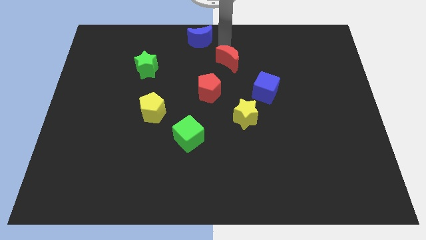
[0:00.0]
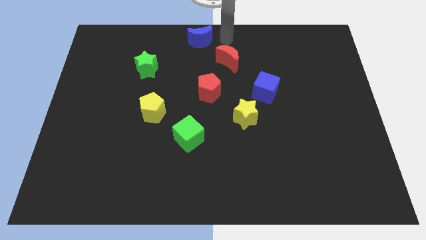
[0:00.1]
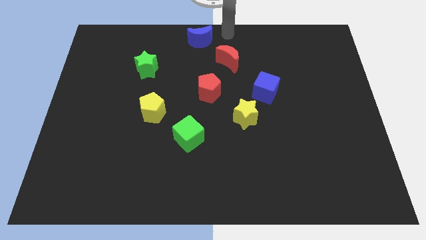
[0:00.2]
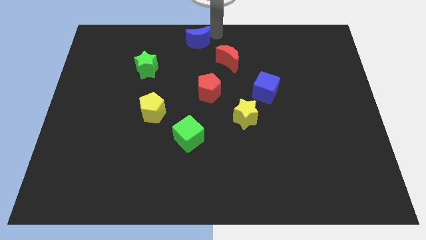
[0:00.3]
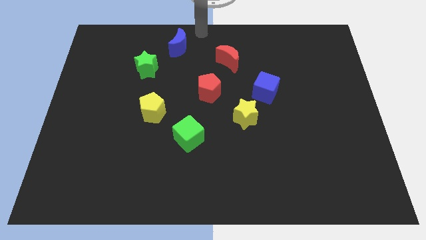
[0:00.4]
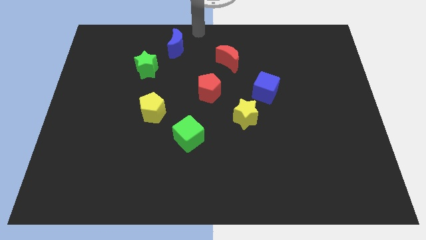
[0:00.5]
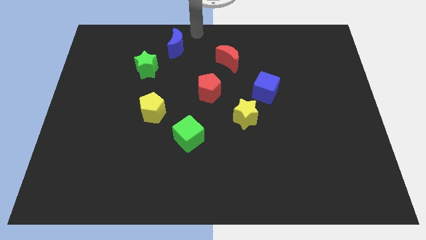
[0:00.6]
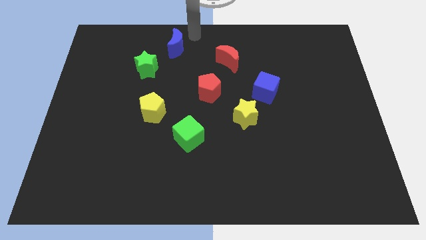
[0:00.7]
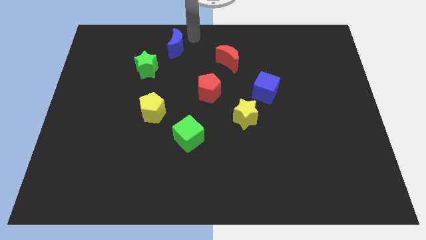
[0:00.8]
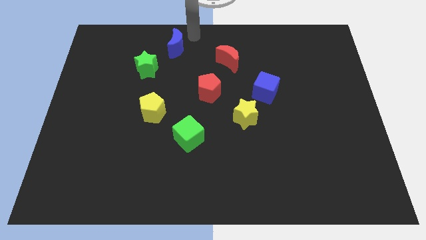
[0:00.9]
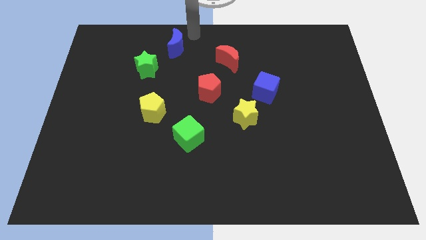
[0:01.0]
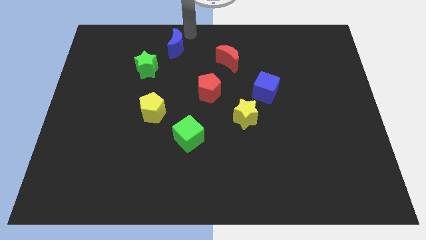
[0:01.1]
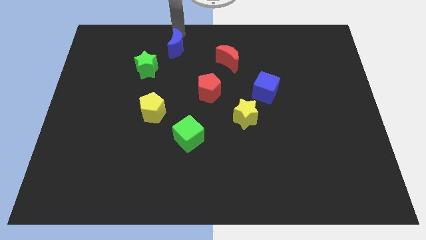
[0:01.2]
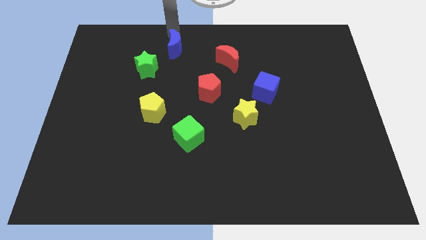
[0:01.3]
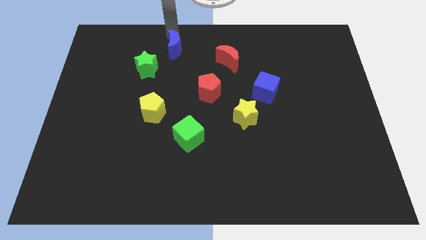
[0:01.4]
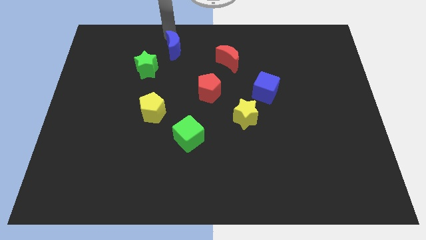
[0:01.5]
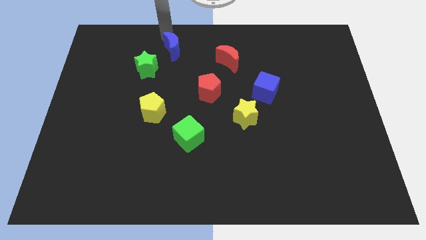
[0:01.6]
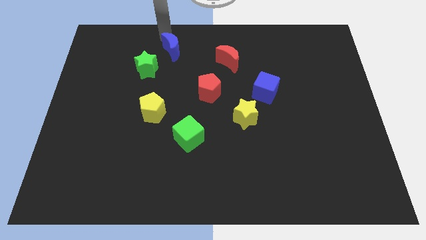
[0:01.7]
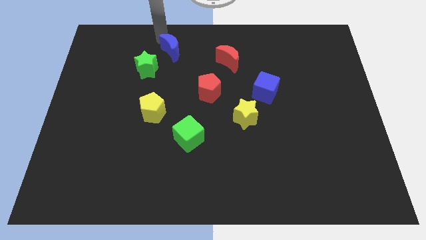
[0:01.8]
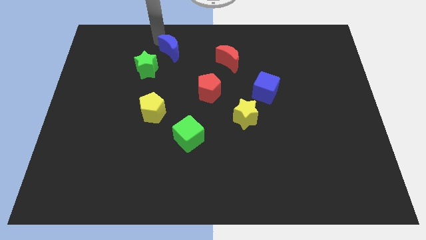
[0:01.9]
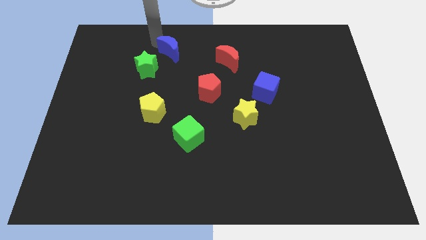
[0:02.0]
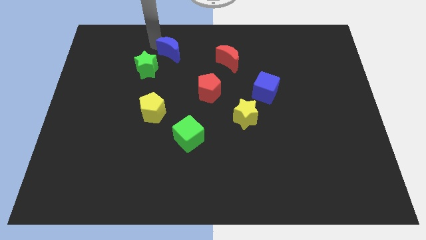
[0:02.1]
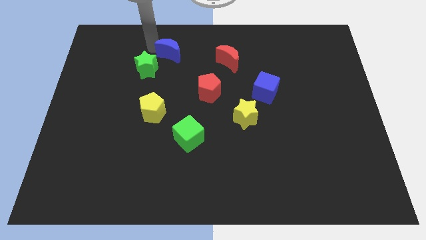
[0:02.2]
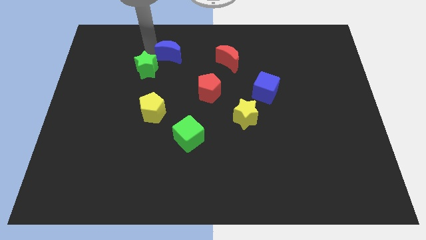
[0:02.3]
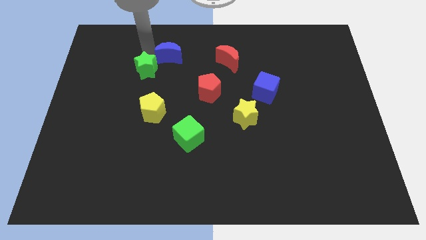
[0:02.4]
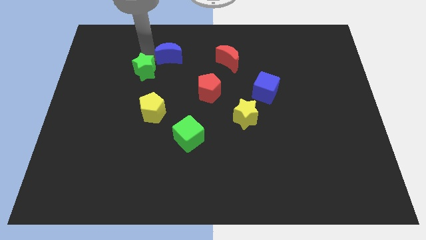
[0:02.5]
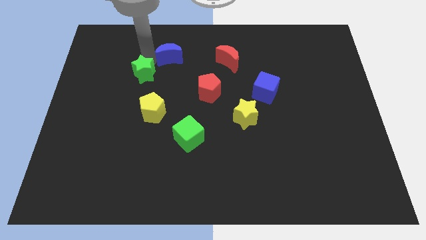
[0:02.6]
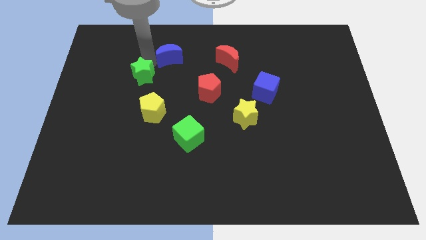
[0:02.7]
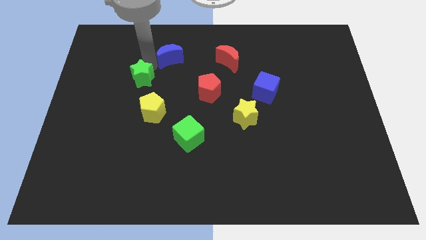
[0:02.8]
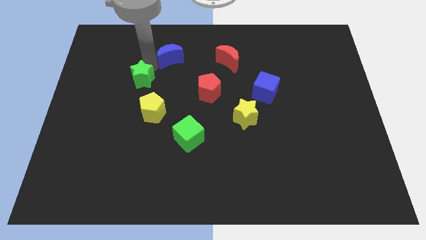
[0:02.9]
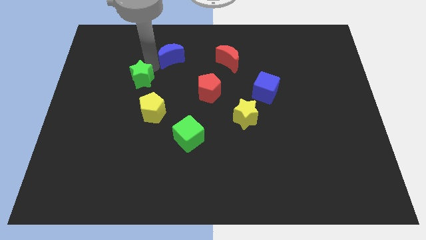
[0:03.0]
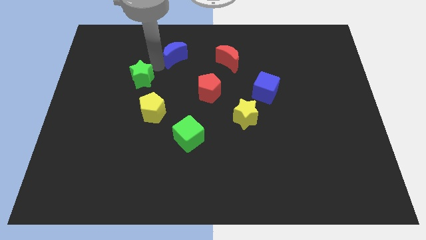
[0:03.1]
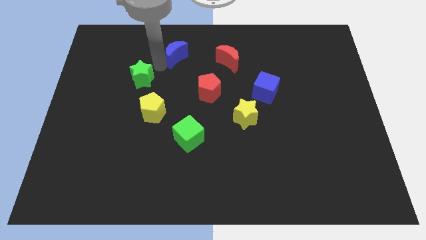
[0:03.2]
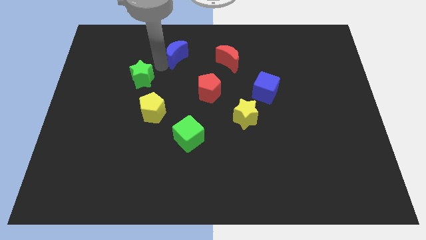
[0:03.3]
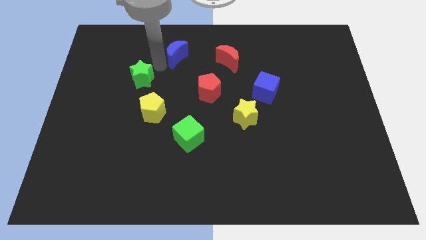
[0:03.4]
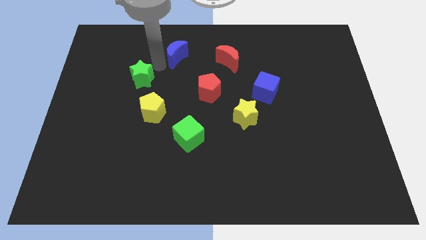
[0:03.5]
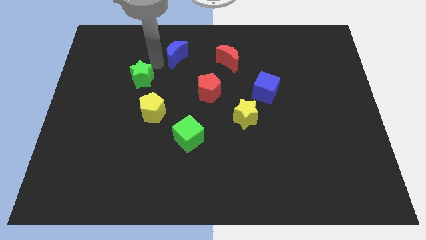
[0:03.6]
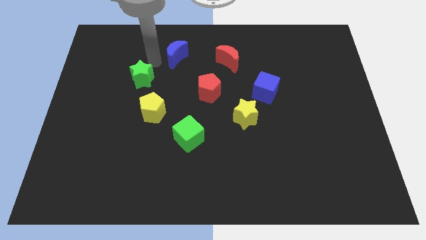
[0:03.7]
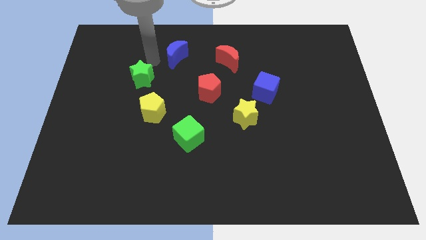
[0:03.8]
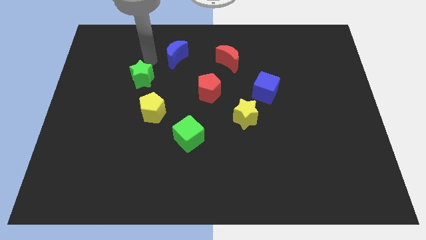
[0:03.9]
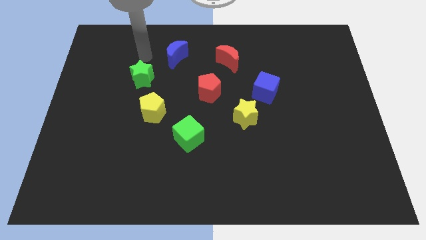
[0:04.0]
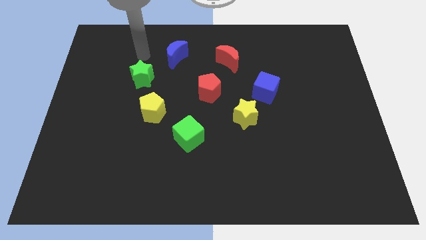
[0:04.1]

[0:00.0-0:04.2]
place the blue crescent diagonally on the top left side of the red pentagon

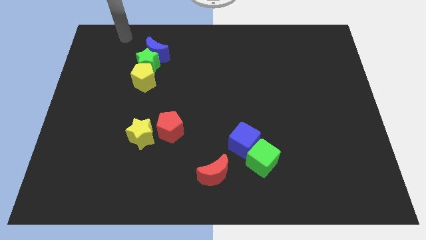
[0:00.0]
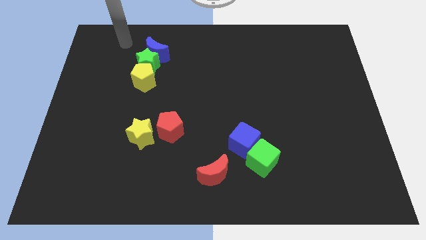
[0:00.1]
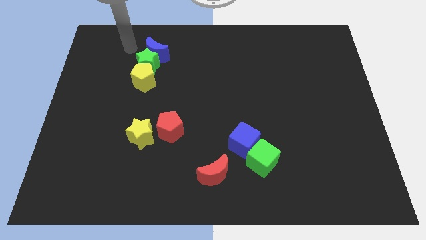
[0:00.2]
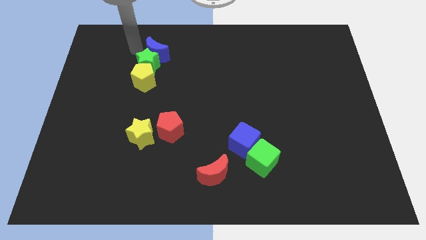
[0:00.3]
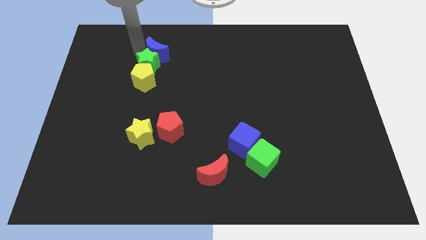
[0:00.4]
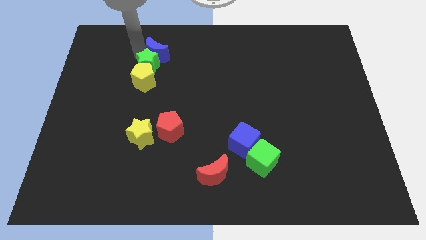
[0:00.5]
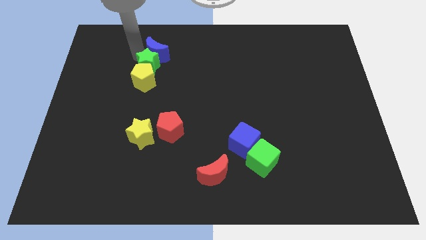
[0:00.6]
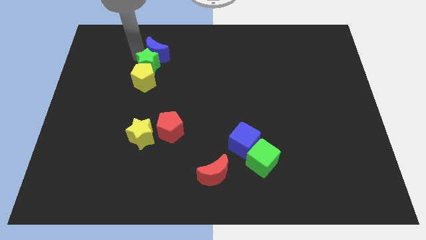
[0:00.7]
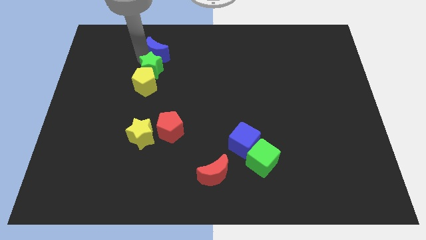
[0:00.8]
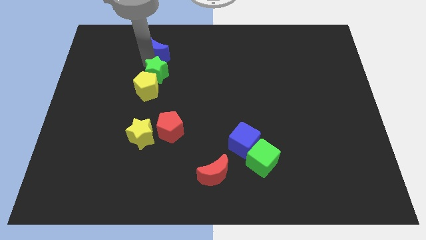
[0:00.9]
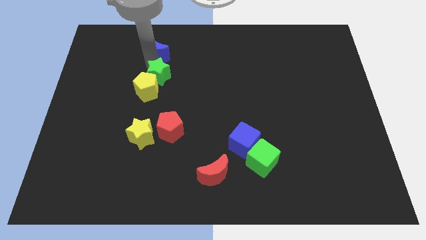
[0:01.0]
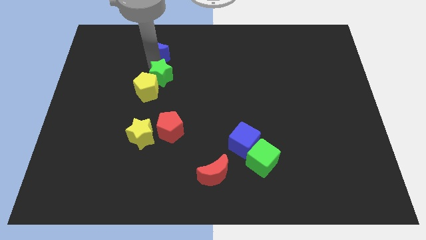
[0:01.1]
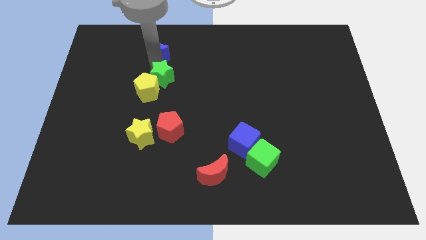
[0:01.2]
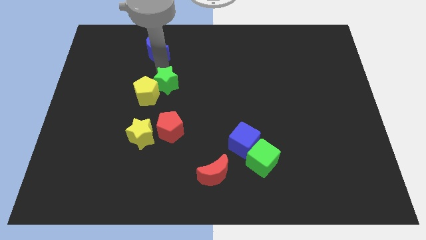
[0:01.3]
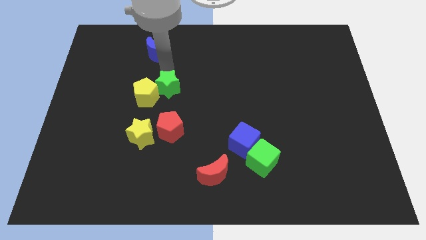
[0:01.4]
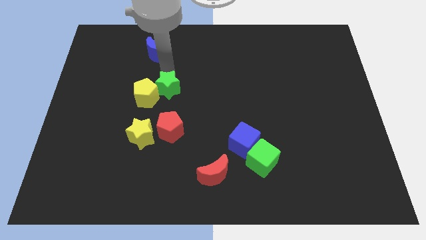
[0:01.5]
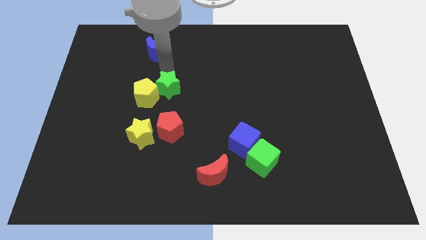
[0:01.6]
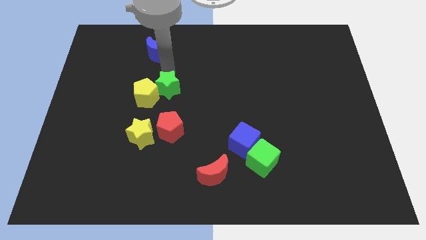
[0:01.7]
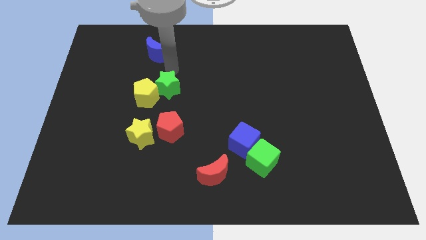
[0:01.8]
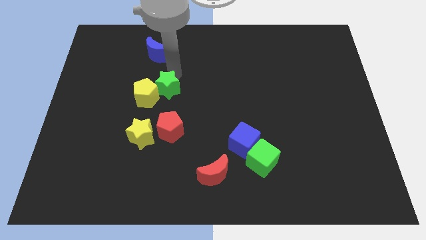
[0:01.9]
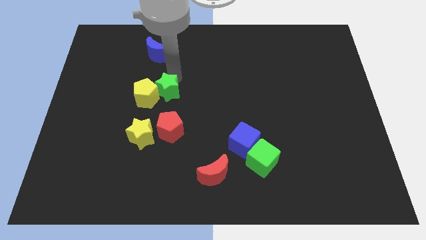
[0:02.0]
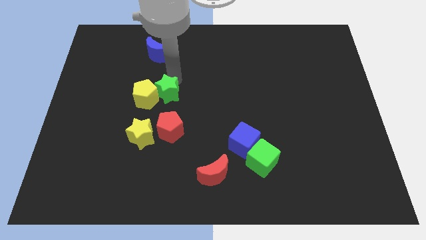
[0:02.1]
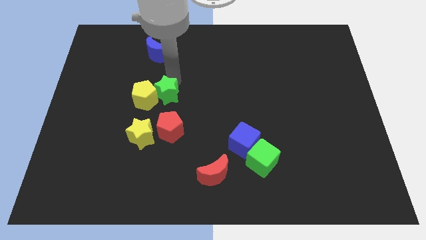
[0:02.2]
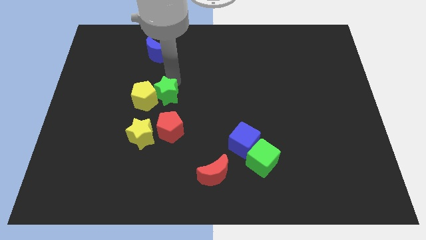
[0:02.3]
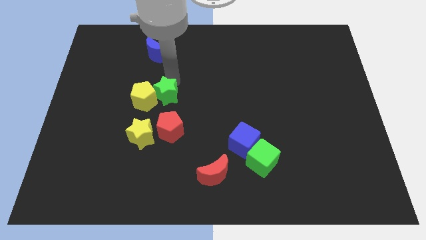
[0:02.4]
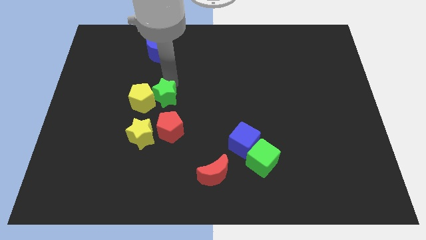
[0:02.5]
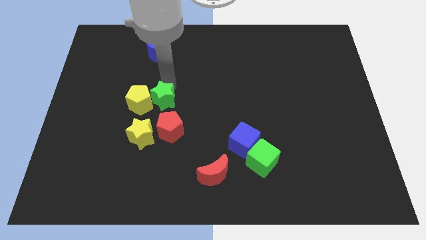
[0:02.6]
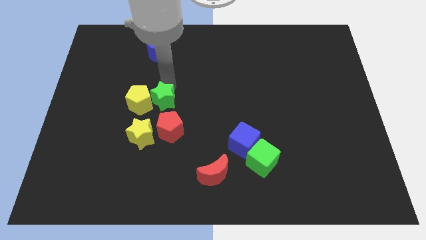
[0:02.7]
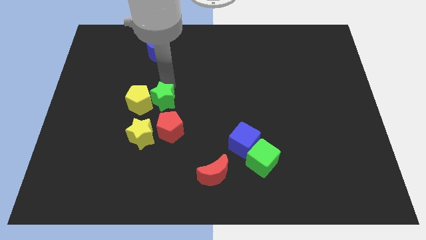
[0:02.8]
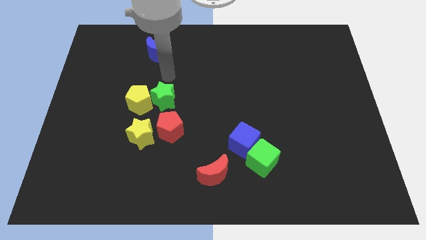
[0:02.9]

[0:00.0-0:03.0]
push the green star and yellow pentagon above the red pentagon and yellow star

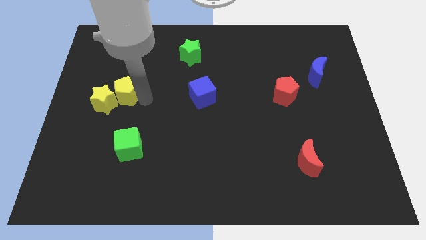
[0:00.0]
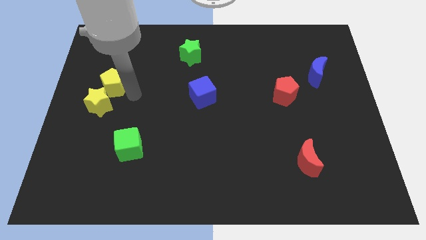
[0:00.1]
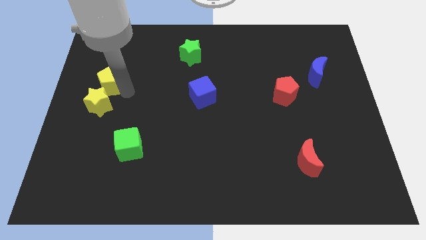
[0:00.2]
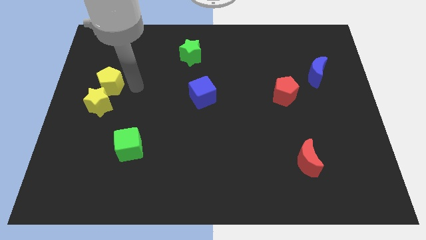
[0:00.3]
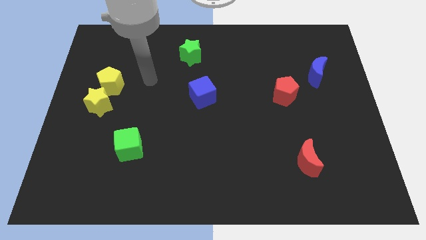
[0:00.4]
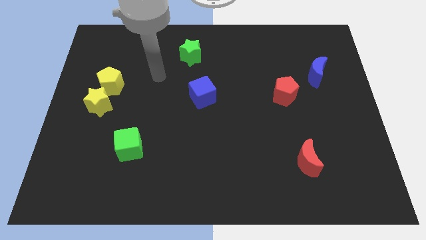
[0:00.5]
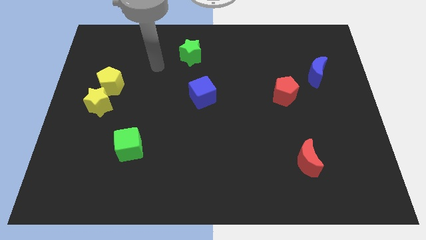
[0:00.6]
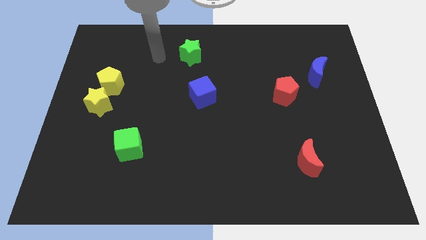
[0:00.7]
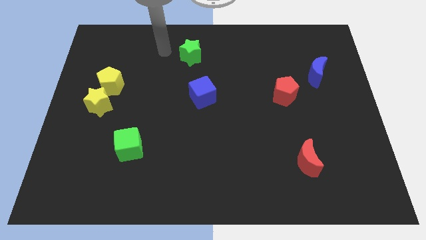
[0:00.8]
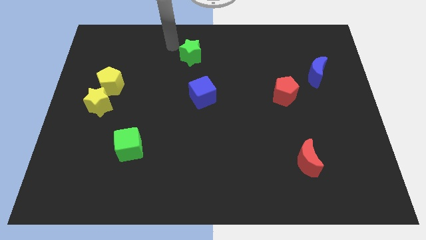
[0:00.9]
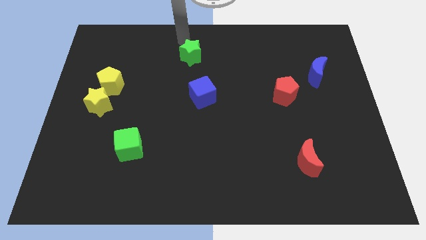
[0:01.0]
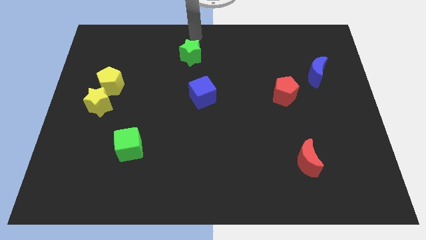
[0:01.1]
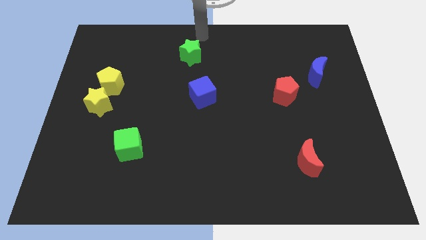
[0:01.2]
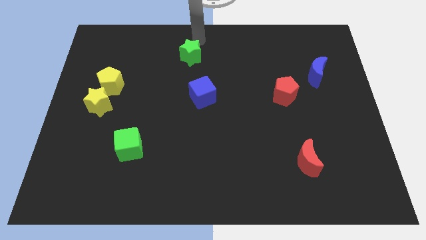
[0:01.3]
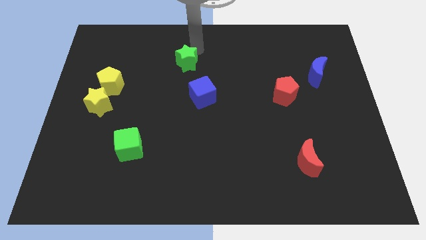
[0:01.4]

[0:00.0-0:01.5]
point your arm at the top of green star
